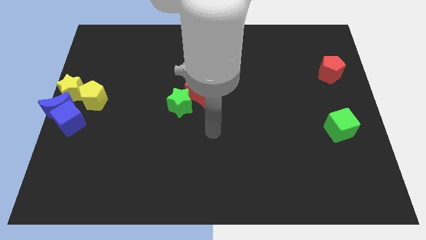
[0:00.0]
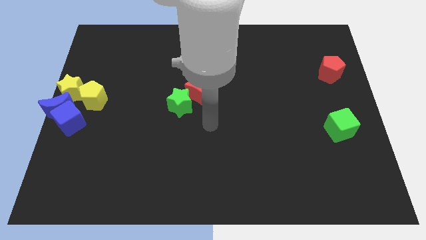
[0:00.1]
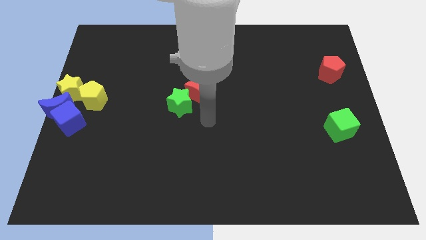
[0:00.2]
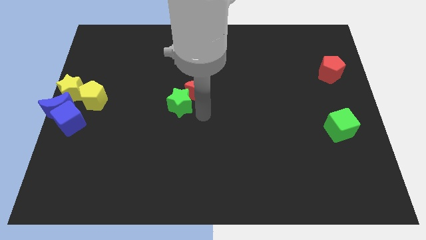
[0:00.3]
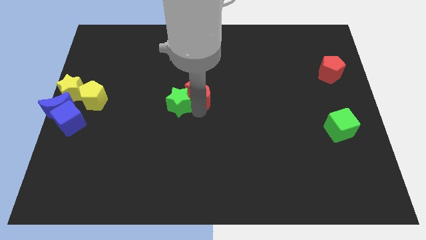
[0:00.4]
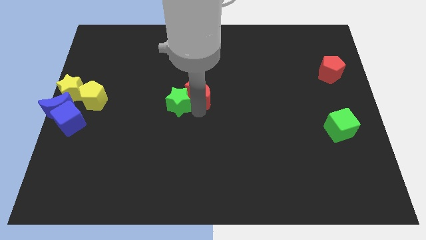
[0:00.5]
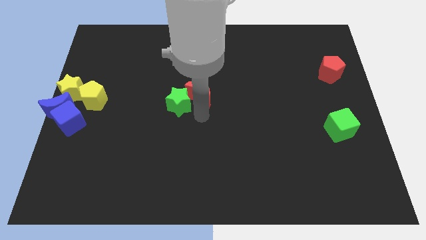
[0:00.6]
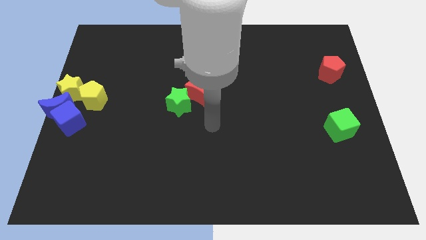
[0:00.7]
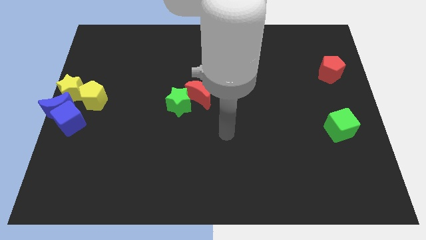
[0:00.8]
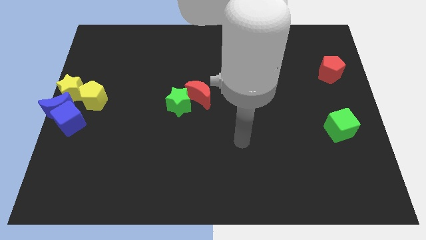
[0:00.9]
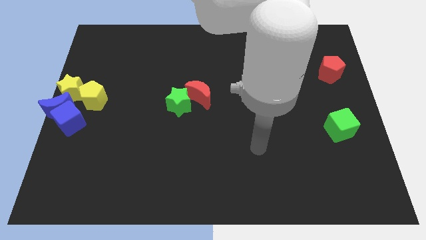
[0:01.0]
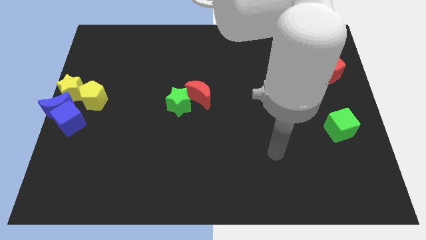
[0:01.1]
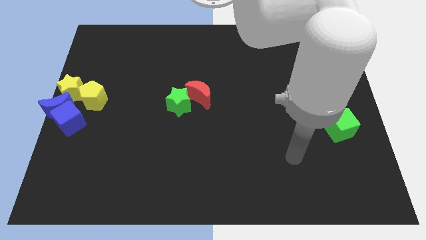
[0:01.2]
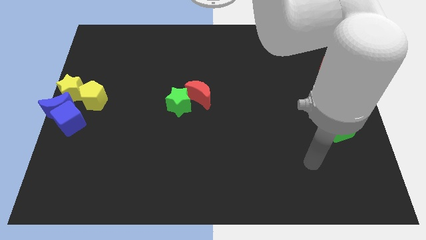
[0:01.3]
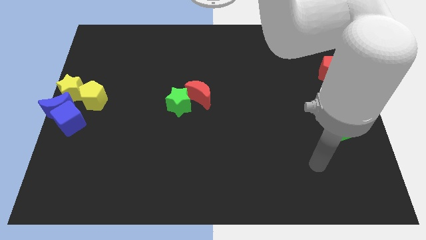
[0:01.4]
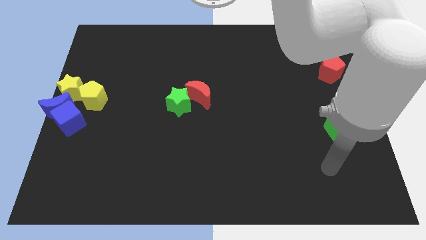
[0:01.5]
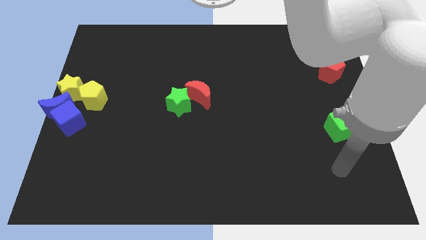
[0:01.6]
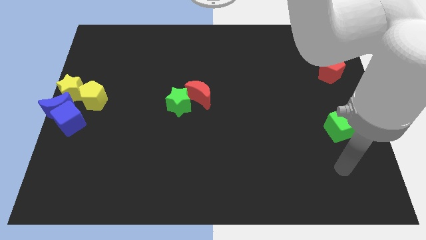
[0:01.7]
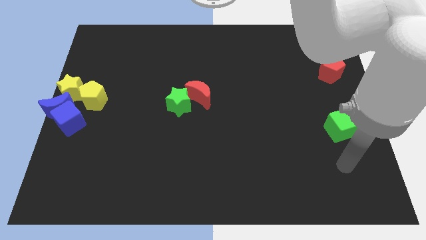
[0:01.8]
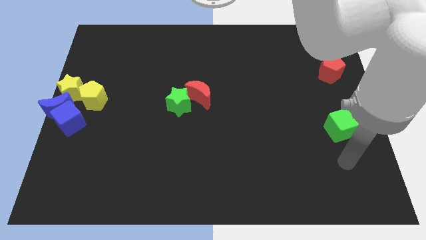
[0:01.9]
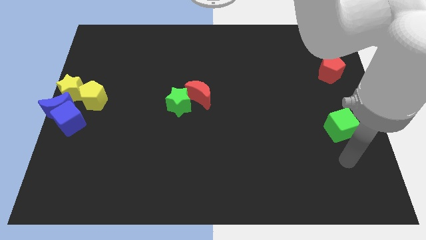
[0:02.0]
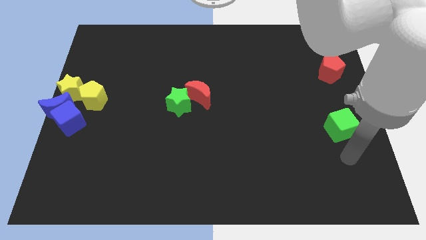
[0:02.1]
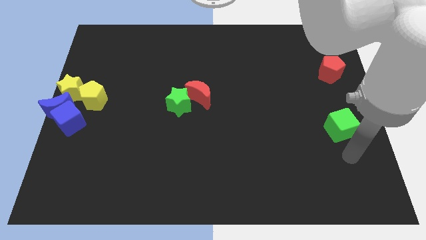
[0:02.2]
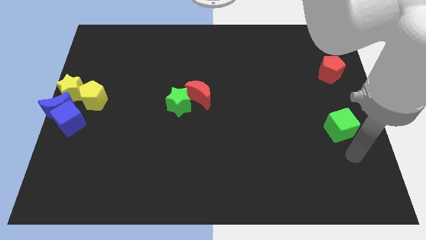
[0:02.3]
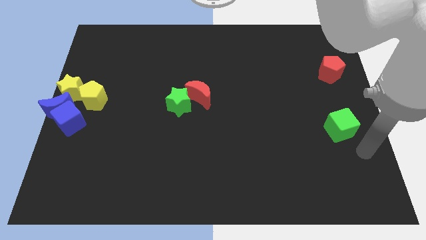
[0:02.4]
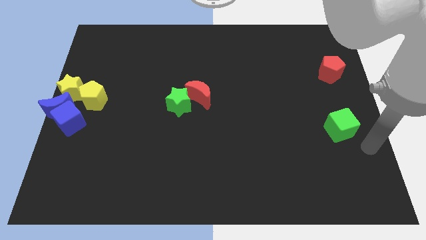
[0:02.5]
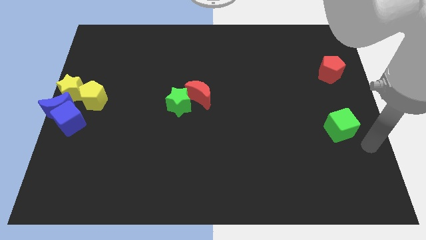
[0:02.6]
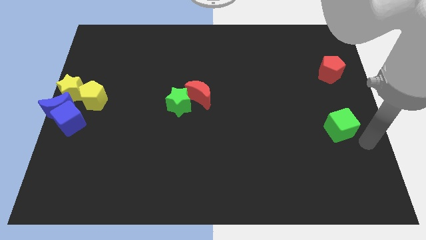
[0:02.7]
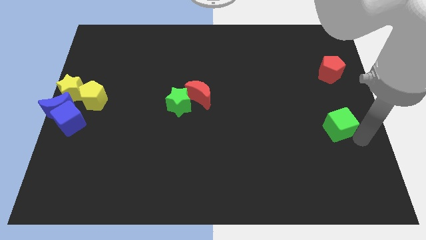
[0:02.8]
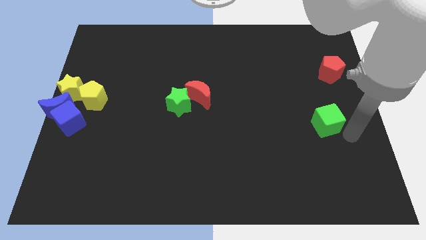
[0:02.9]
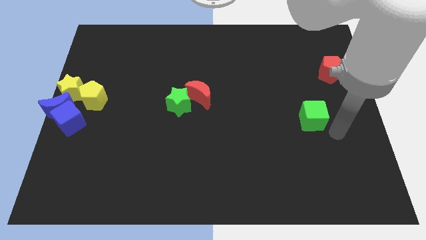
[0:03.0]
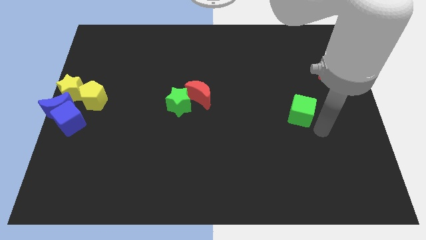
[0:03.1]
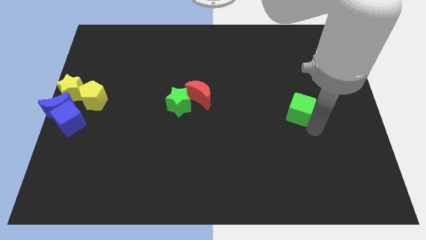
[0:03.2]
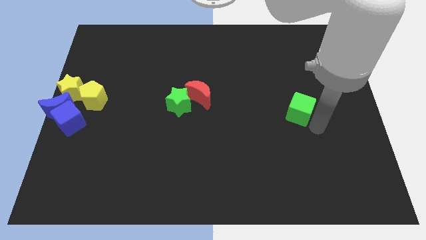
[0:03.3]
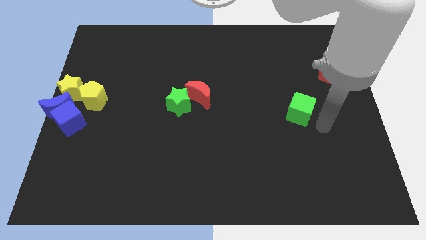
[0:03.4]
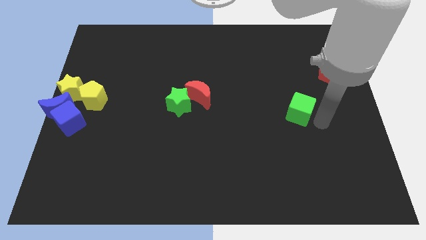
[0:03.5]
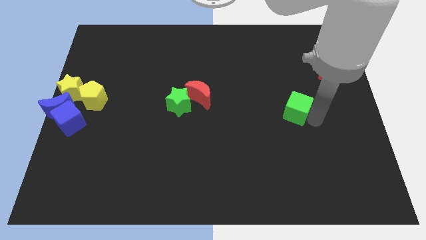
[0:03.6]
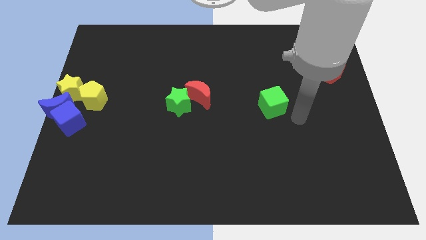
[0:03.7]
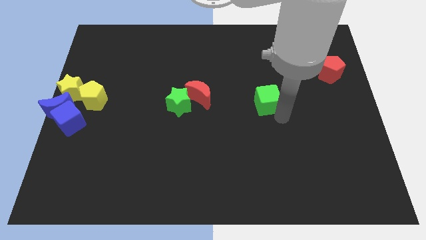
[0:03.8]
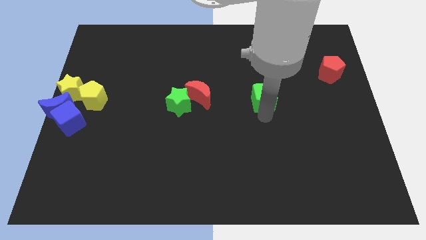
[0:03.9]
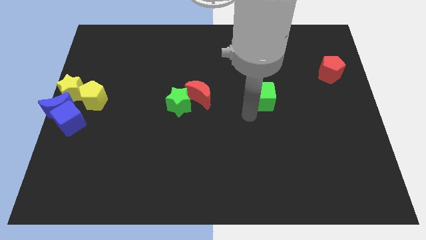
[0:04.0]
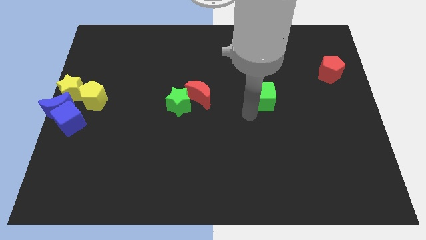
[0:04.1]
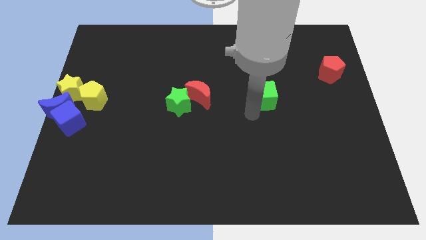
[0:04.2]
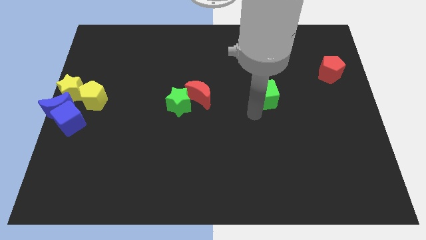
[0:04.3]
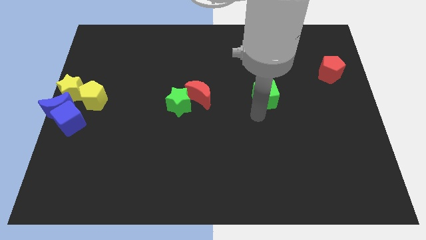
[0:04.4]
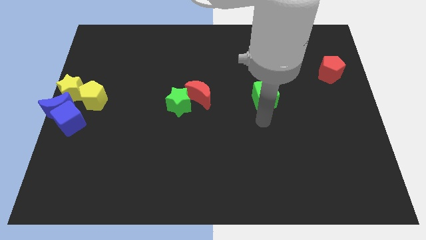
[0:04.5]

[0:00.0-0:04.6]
move green cube right beside the red moon

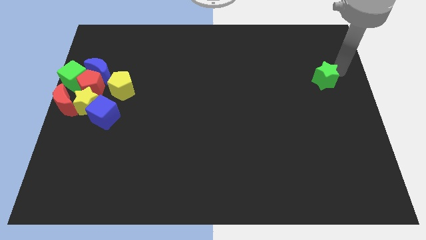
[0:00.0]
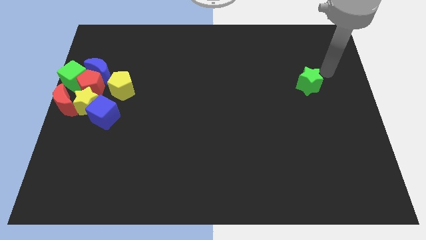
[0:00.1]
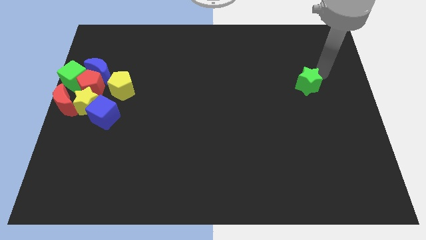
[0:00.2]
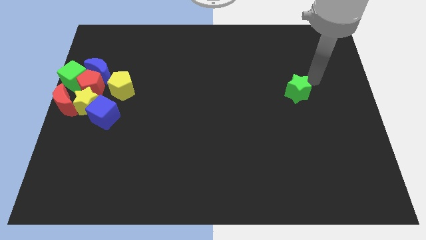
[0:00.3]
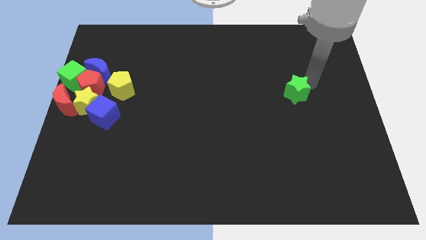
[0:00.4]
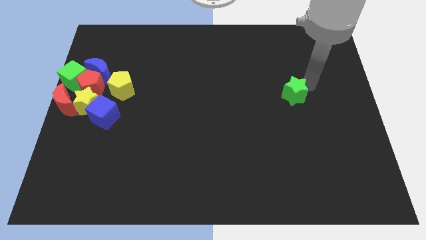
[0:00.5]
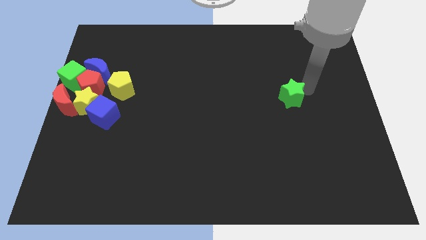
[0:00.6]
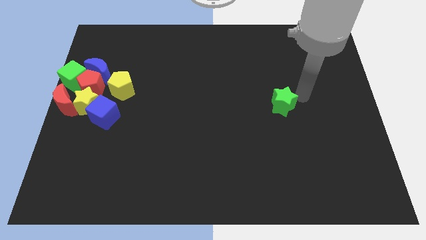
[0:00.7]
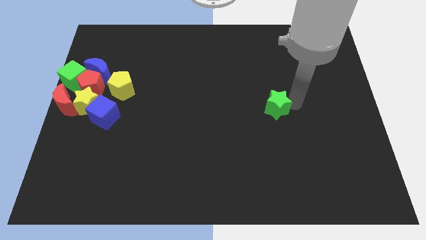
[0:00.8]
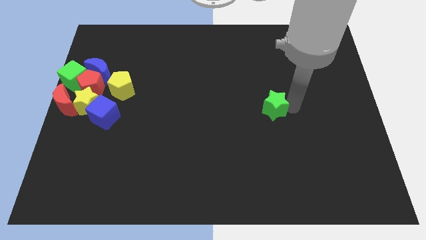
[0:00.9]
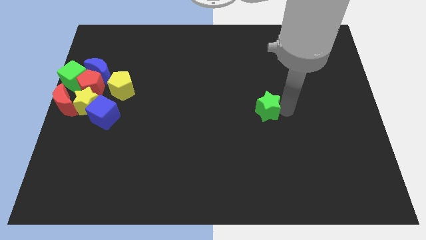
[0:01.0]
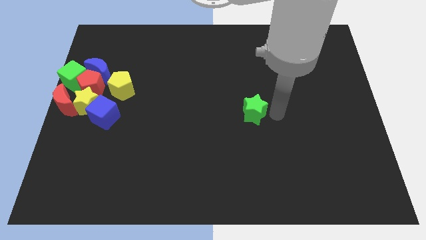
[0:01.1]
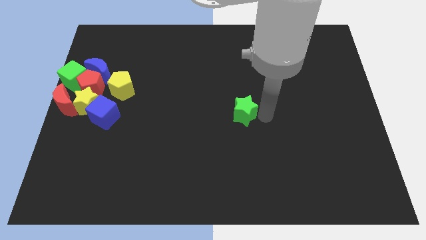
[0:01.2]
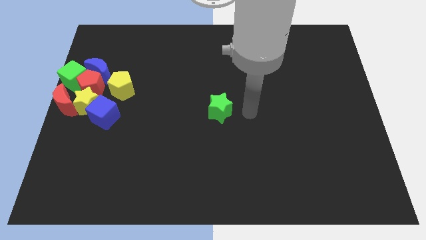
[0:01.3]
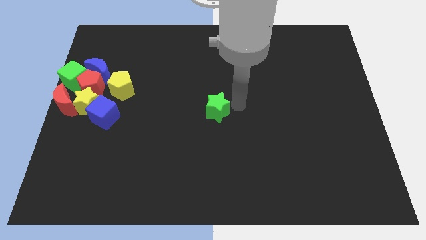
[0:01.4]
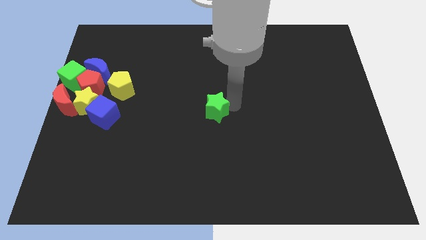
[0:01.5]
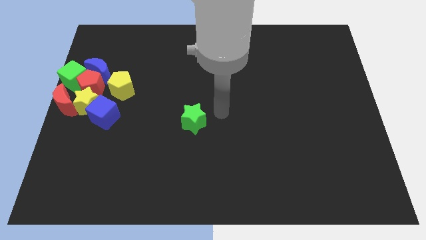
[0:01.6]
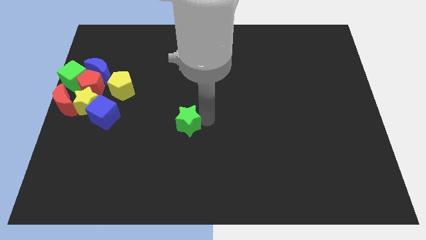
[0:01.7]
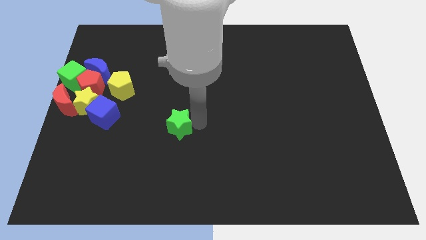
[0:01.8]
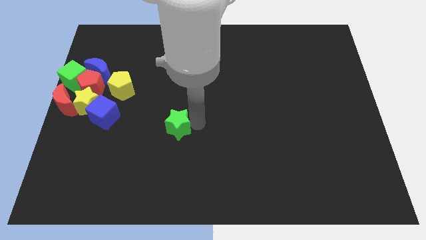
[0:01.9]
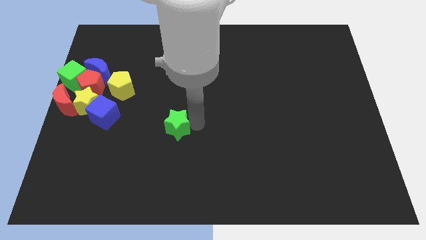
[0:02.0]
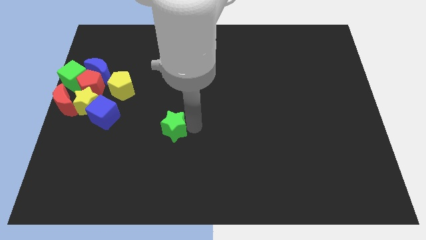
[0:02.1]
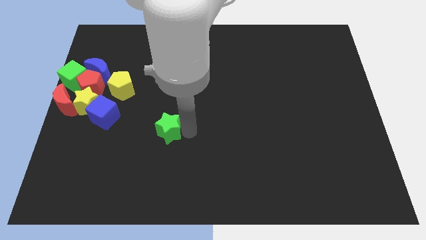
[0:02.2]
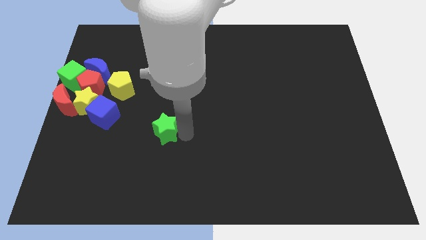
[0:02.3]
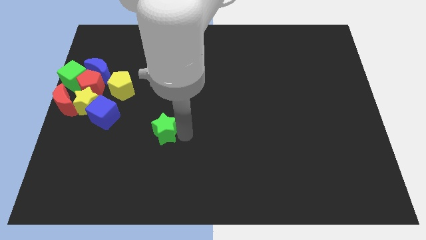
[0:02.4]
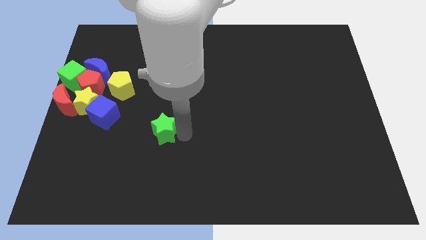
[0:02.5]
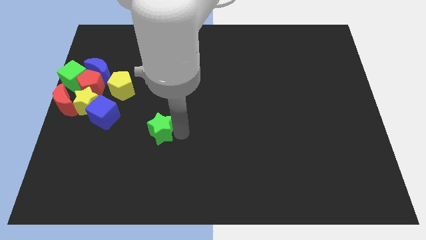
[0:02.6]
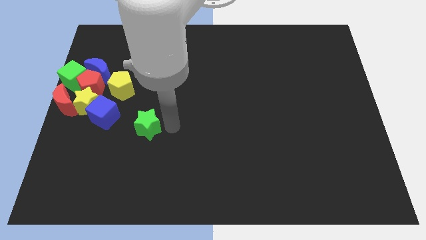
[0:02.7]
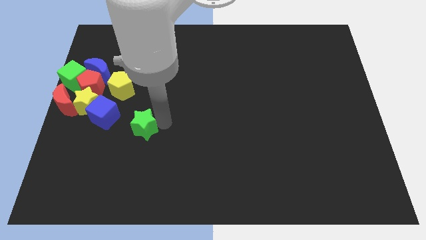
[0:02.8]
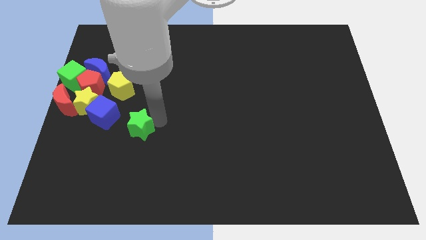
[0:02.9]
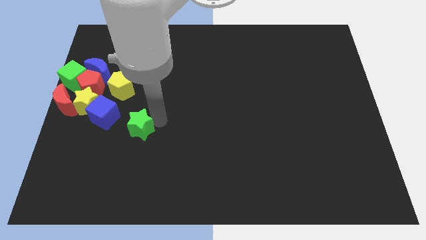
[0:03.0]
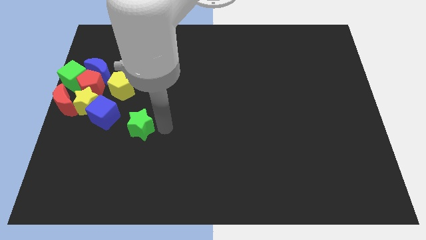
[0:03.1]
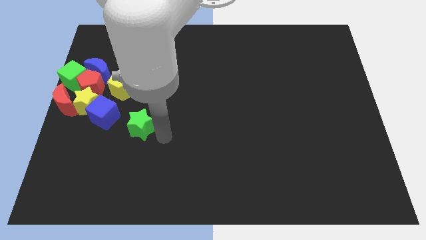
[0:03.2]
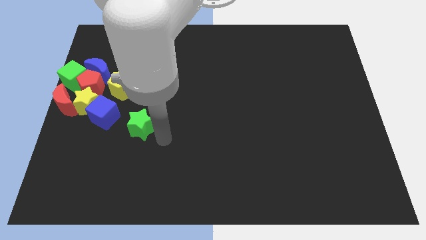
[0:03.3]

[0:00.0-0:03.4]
push the green star towards the blue cube

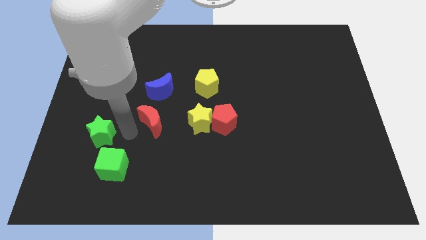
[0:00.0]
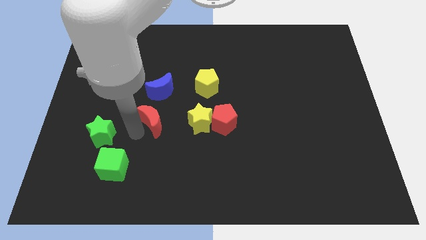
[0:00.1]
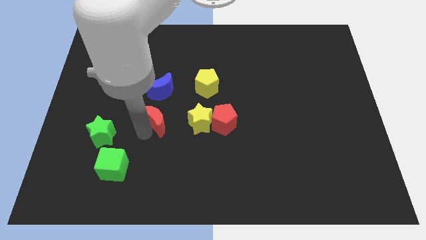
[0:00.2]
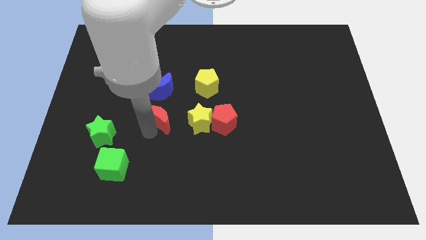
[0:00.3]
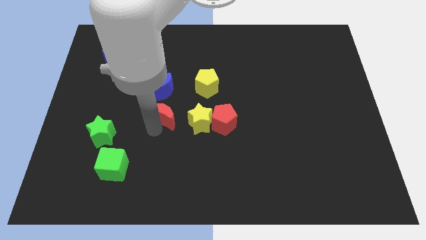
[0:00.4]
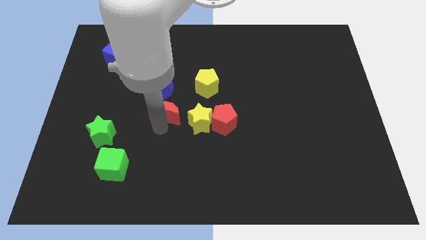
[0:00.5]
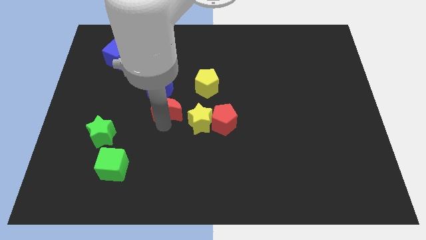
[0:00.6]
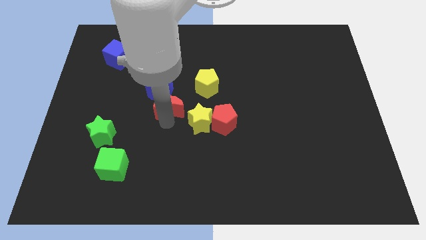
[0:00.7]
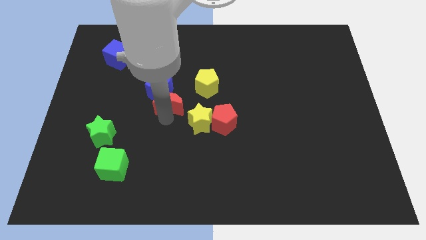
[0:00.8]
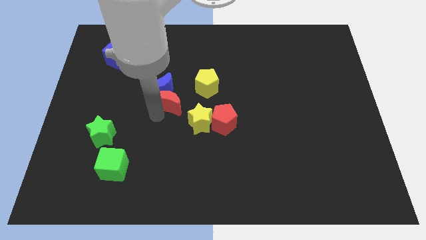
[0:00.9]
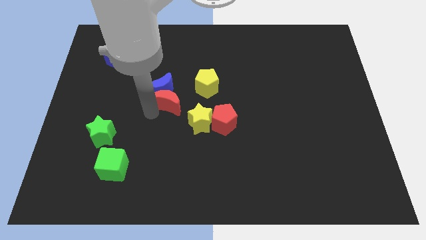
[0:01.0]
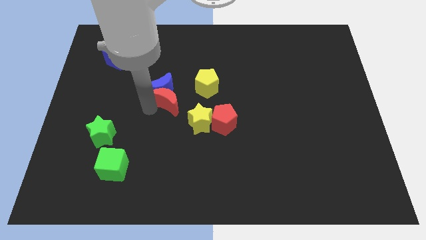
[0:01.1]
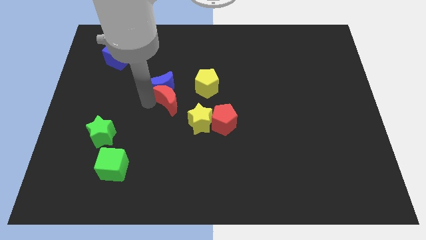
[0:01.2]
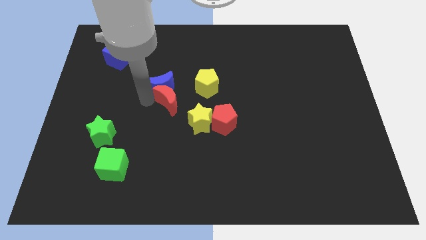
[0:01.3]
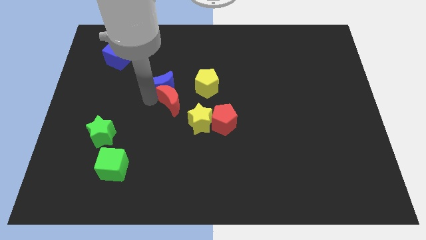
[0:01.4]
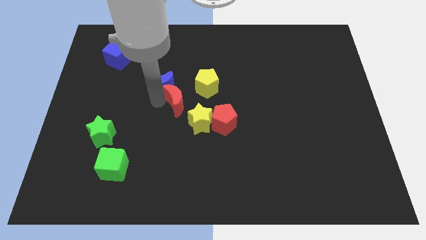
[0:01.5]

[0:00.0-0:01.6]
move the red crescent below the blue crescent
